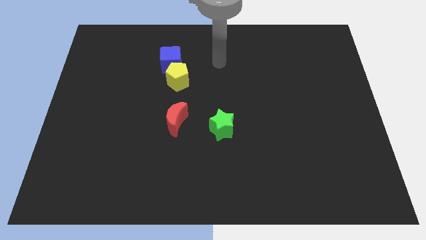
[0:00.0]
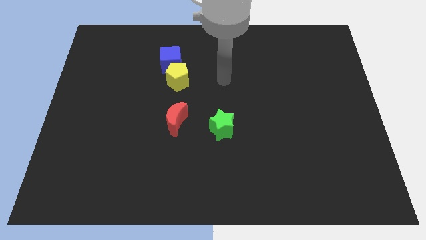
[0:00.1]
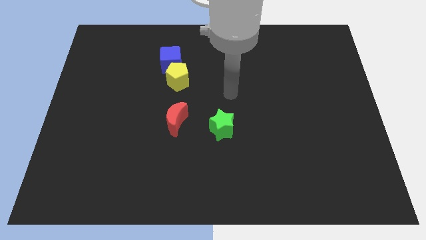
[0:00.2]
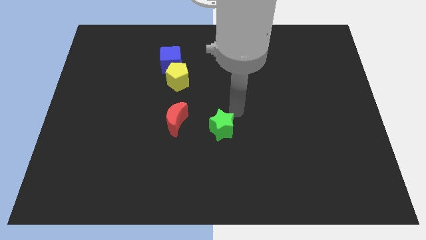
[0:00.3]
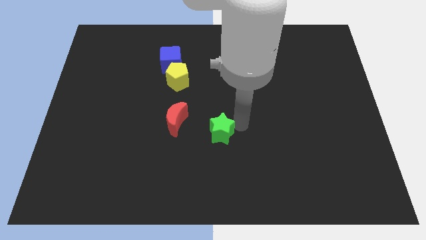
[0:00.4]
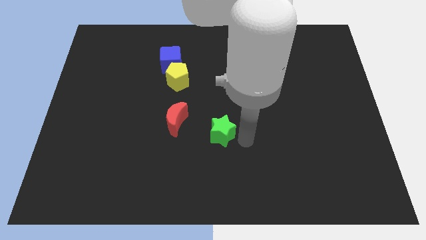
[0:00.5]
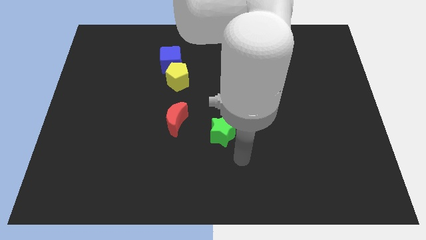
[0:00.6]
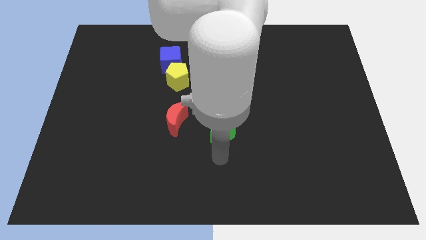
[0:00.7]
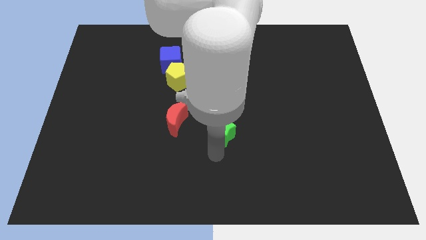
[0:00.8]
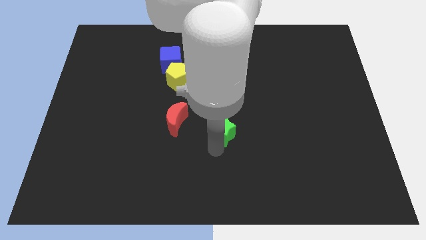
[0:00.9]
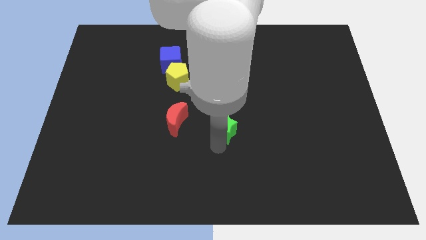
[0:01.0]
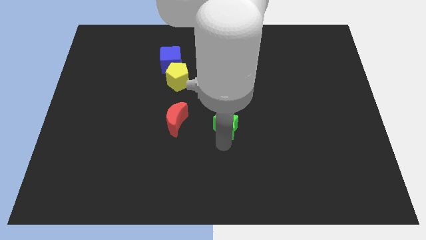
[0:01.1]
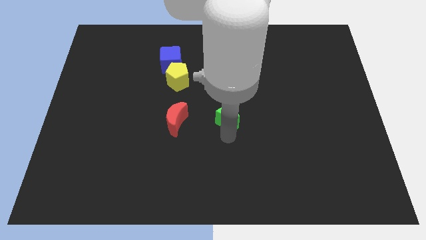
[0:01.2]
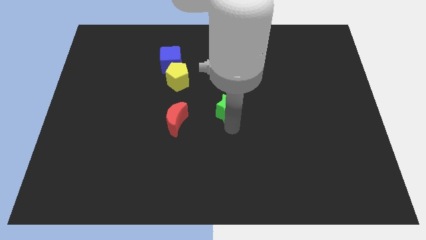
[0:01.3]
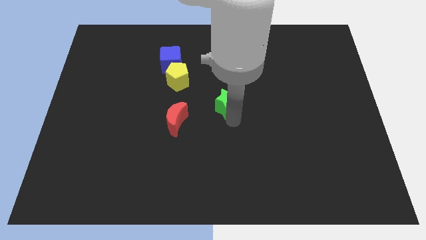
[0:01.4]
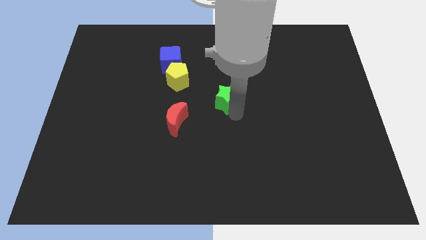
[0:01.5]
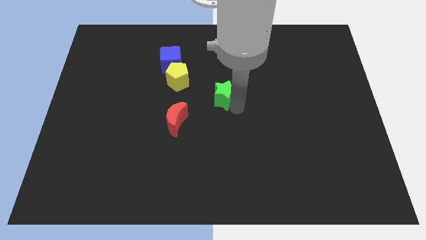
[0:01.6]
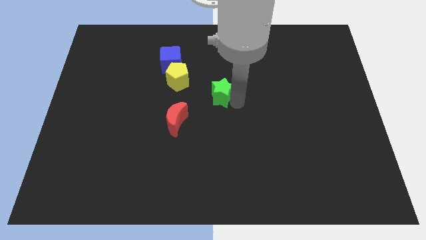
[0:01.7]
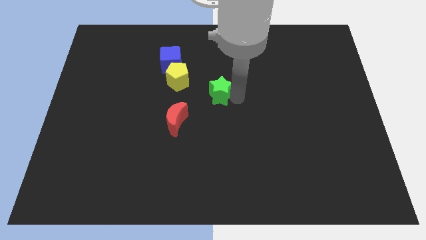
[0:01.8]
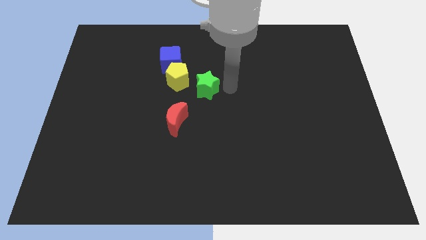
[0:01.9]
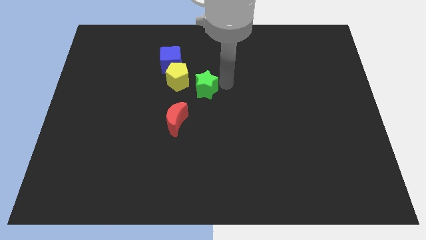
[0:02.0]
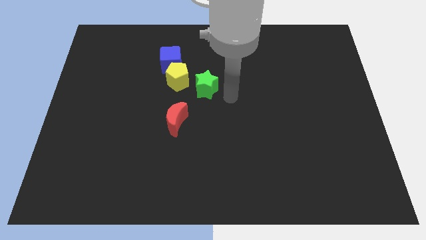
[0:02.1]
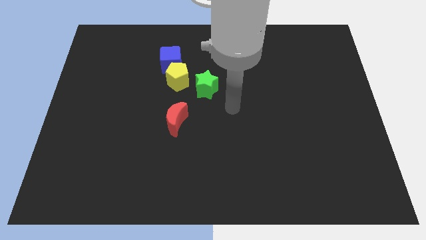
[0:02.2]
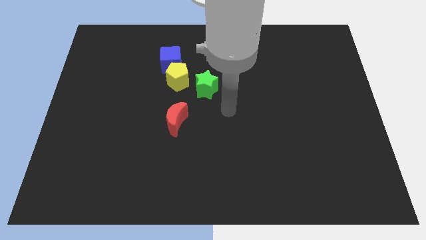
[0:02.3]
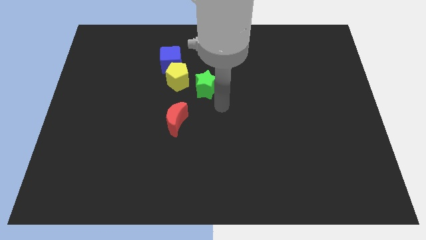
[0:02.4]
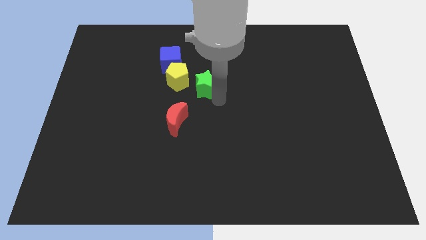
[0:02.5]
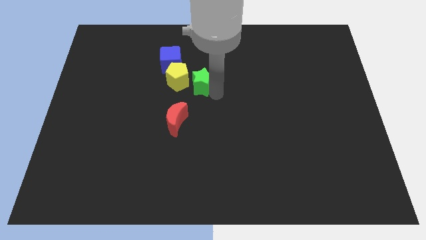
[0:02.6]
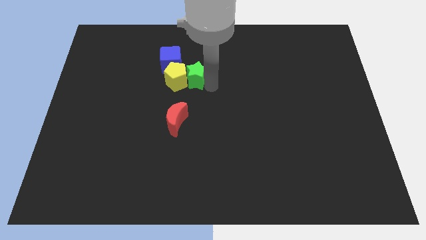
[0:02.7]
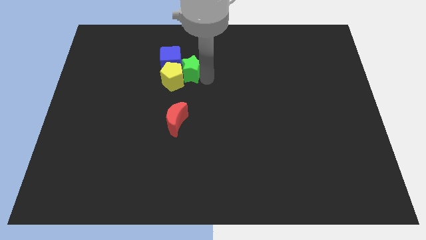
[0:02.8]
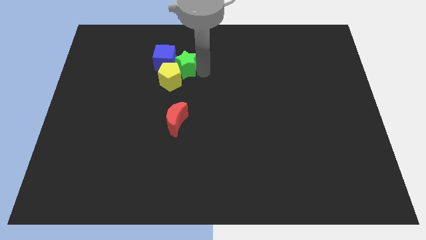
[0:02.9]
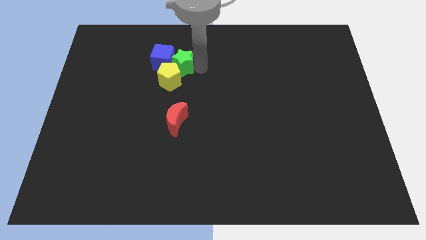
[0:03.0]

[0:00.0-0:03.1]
push the star close to the blue block

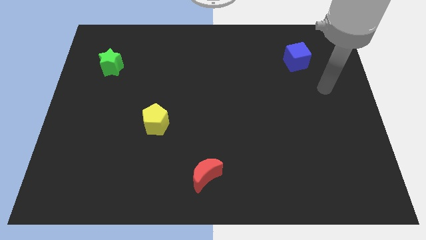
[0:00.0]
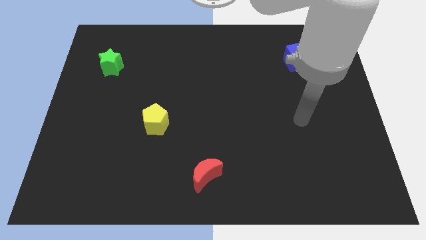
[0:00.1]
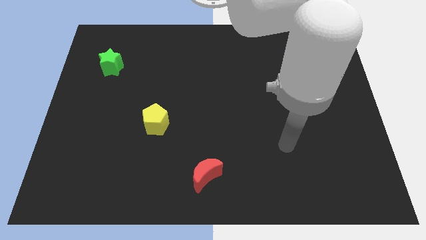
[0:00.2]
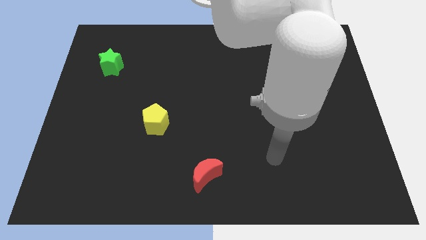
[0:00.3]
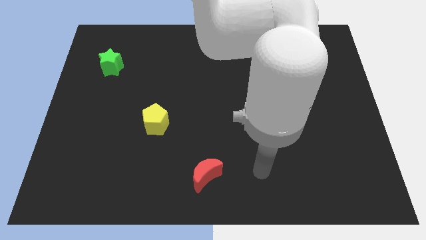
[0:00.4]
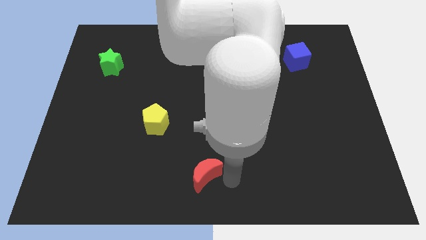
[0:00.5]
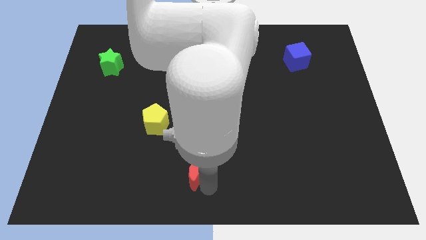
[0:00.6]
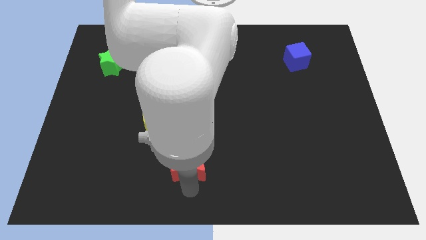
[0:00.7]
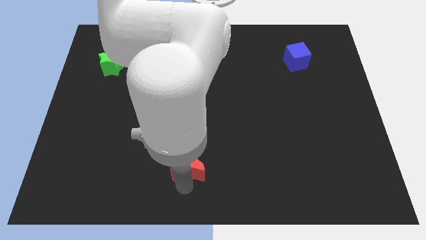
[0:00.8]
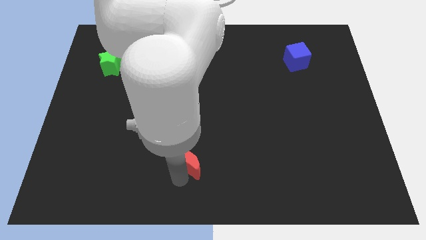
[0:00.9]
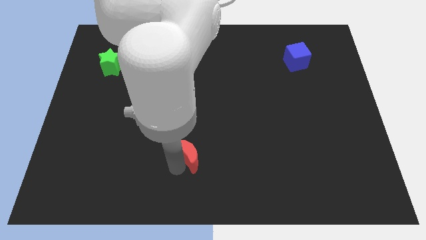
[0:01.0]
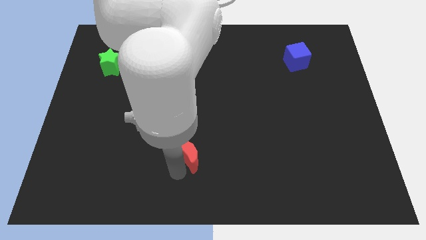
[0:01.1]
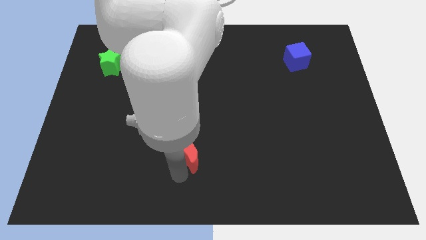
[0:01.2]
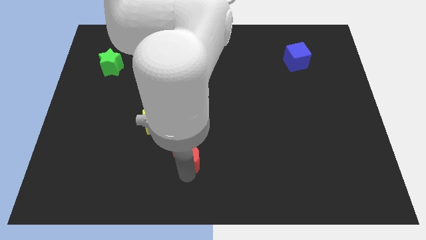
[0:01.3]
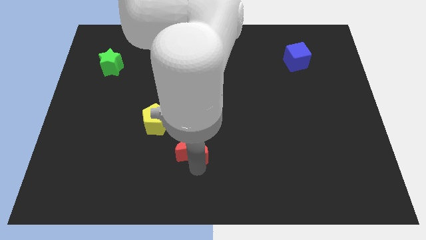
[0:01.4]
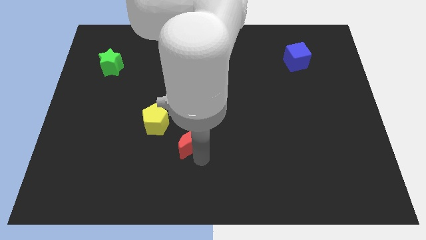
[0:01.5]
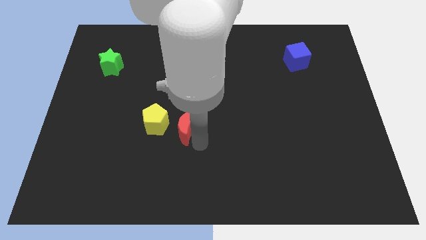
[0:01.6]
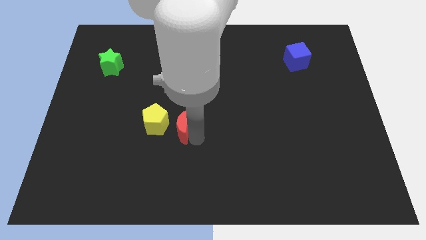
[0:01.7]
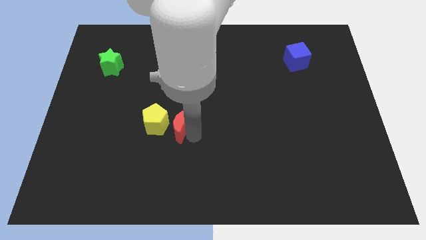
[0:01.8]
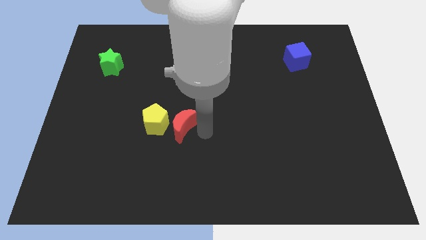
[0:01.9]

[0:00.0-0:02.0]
slide the moon to the yellow pentagon

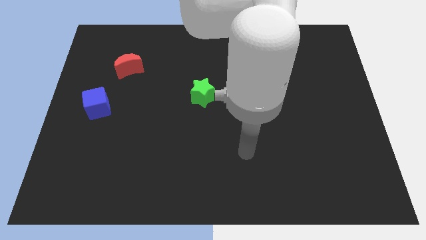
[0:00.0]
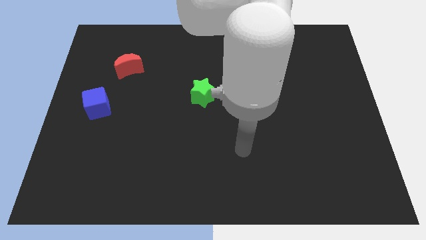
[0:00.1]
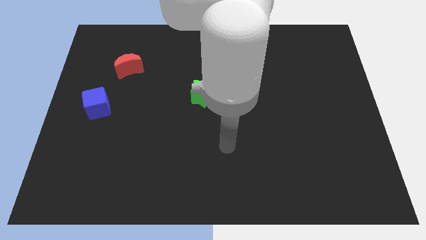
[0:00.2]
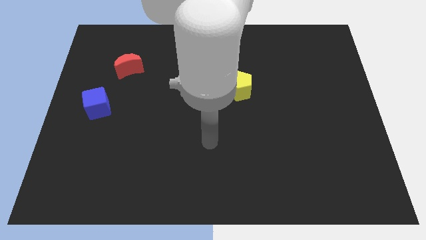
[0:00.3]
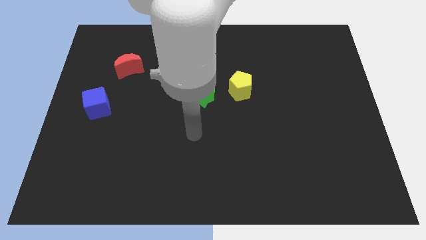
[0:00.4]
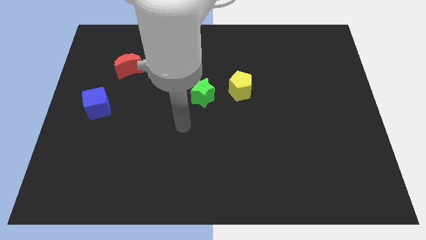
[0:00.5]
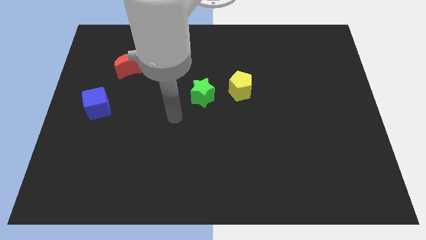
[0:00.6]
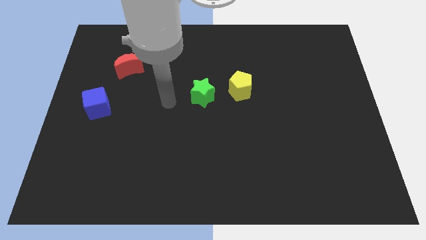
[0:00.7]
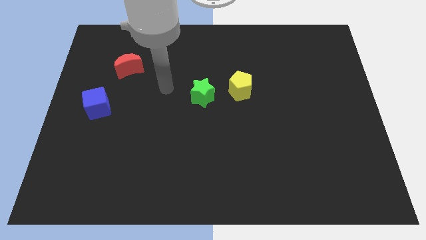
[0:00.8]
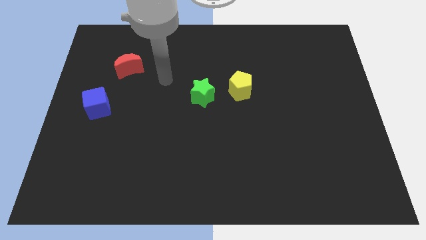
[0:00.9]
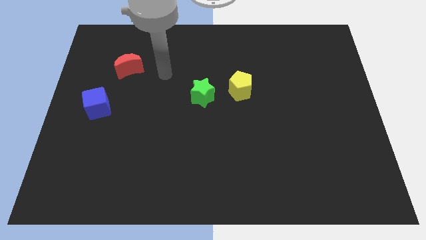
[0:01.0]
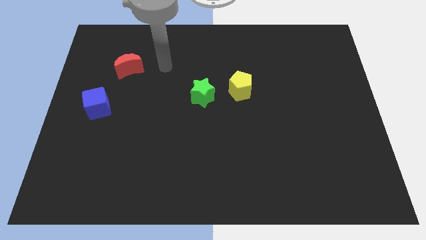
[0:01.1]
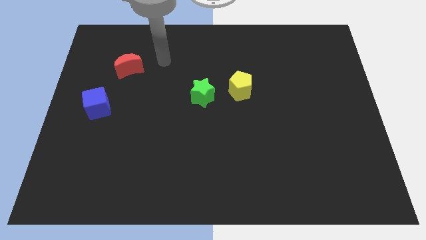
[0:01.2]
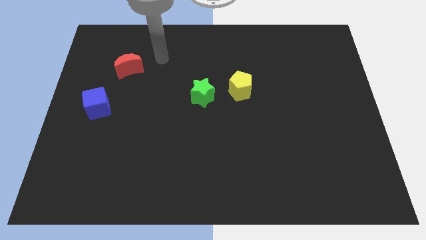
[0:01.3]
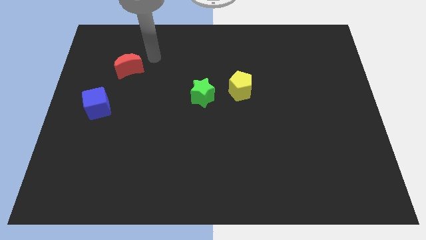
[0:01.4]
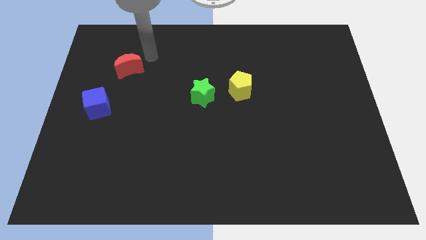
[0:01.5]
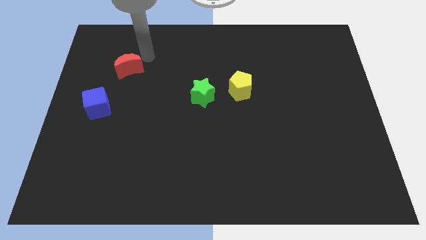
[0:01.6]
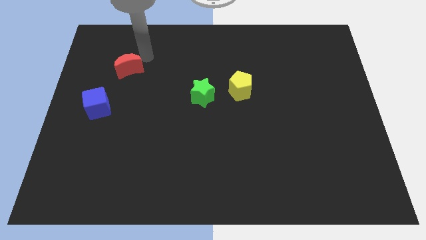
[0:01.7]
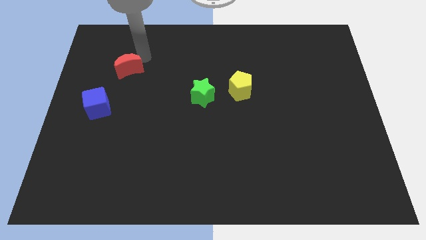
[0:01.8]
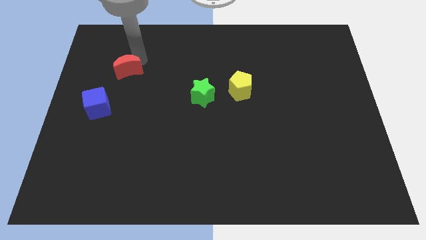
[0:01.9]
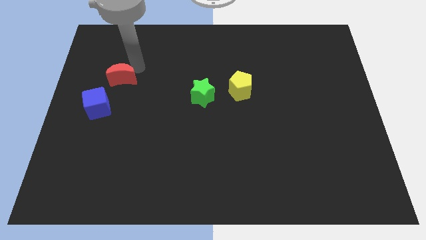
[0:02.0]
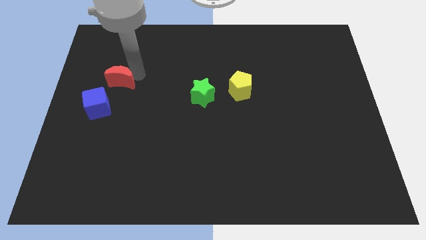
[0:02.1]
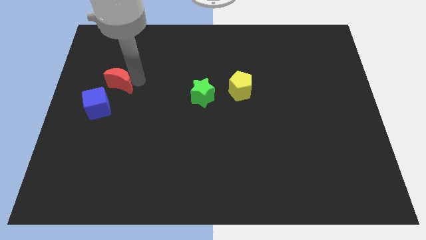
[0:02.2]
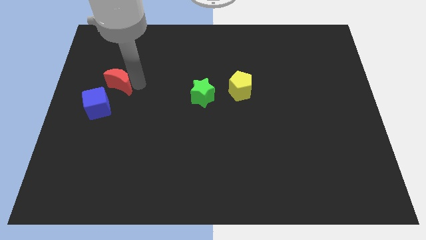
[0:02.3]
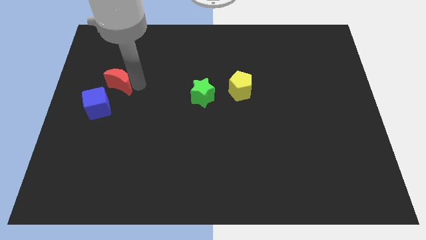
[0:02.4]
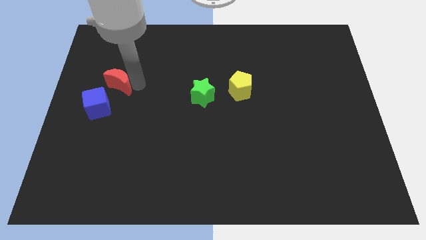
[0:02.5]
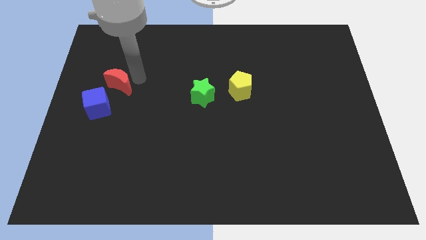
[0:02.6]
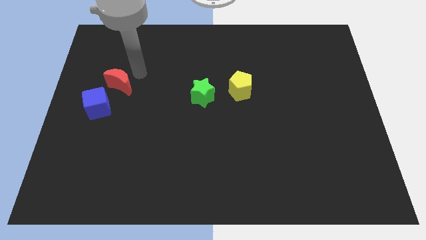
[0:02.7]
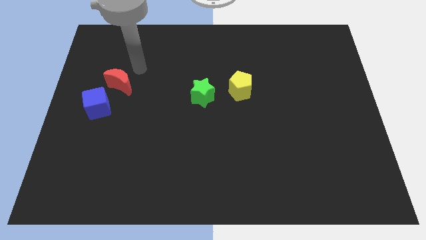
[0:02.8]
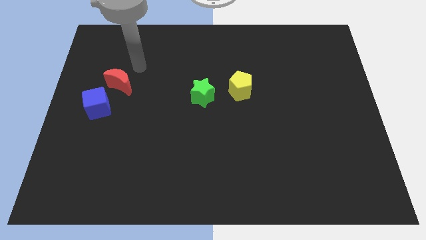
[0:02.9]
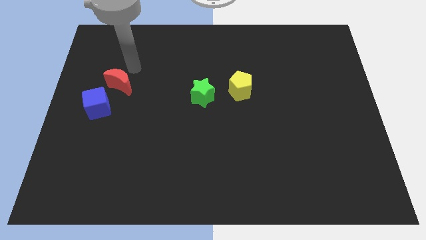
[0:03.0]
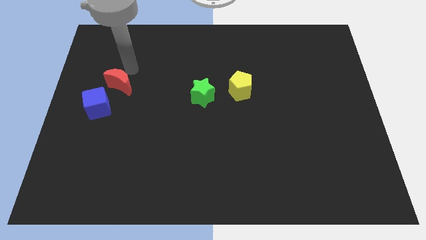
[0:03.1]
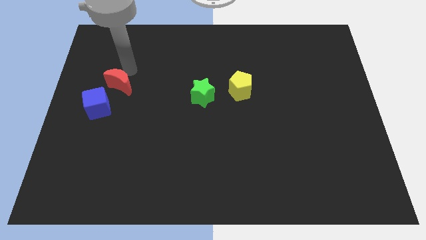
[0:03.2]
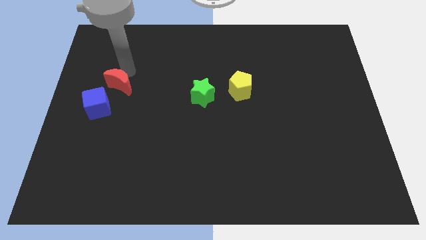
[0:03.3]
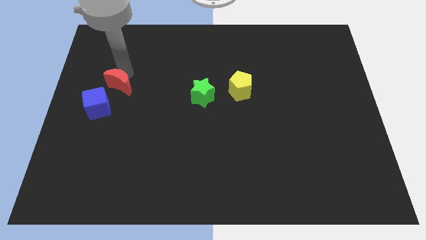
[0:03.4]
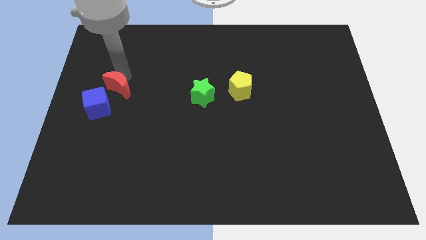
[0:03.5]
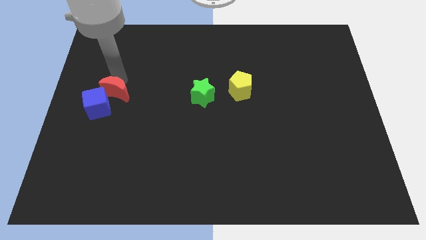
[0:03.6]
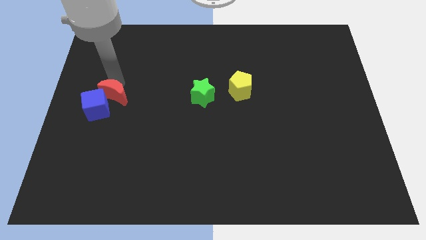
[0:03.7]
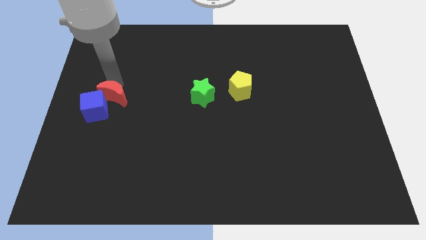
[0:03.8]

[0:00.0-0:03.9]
move the red block next to the cube
